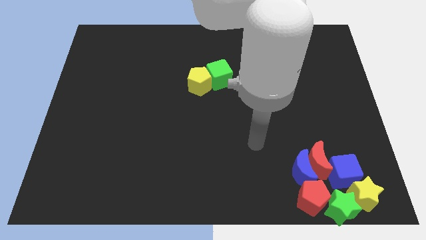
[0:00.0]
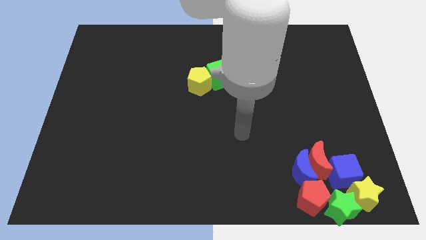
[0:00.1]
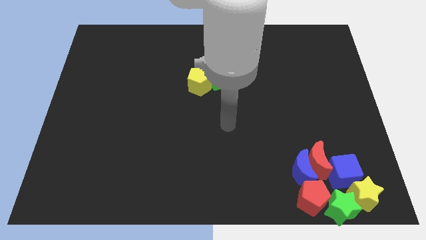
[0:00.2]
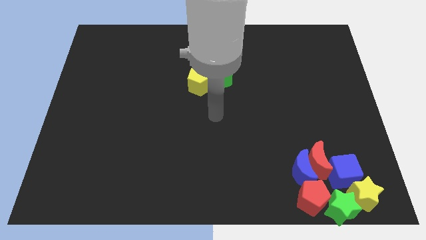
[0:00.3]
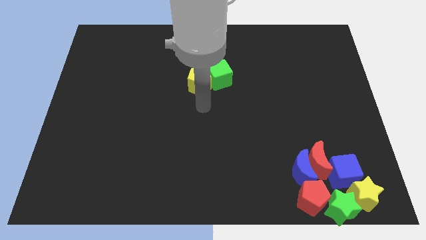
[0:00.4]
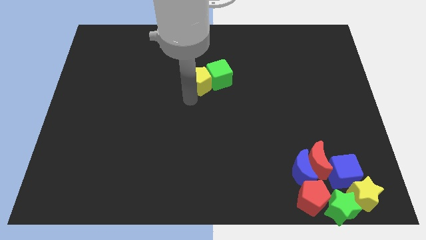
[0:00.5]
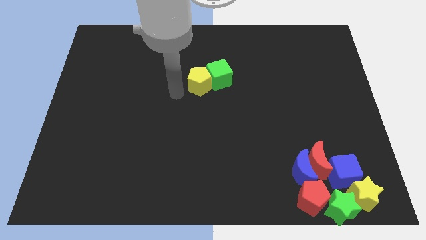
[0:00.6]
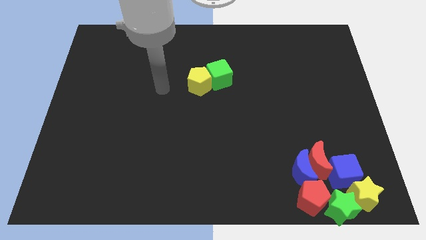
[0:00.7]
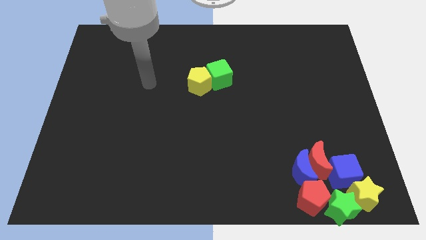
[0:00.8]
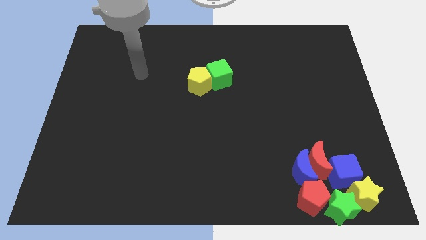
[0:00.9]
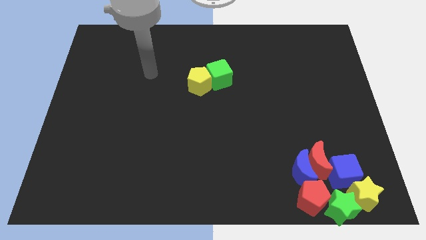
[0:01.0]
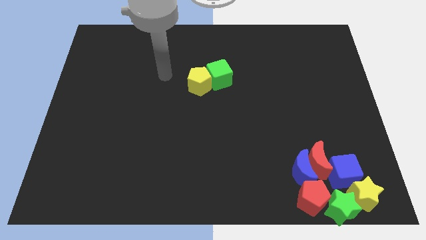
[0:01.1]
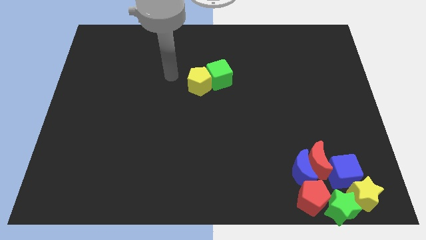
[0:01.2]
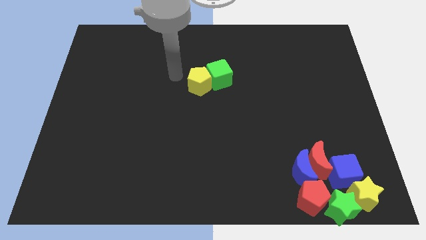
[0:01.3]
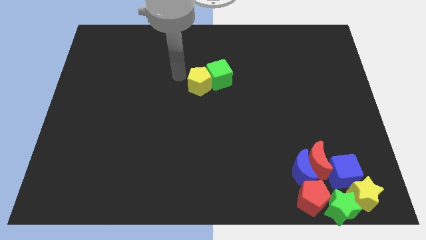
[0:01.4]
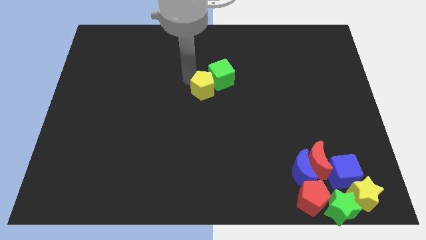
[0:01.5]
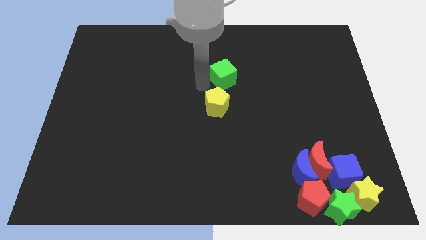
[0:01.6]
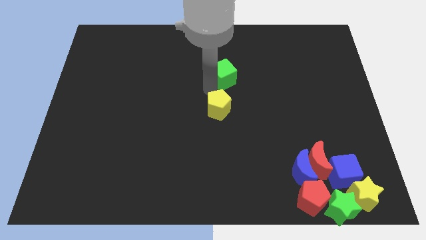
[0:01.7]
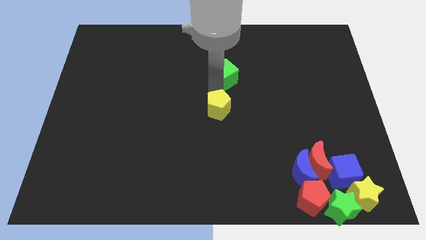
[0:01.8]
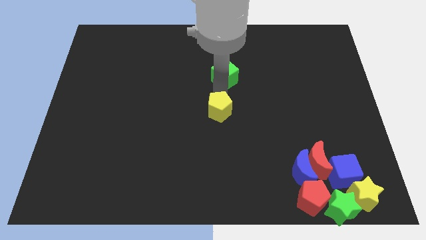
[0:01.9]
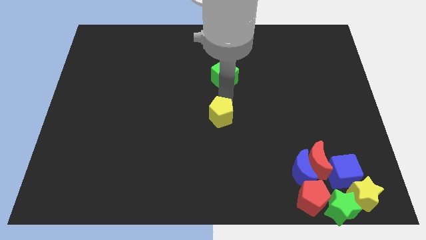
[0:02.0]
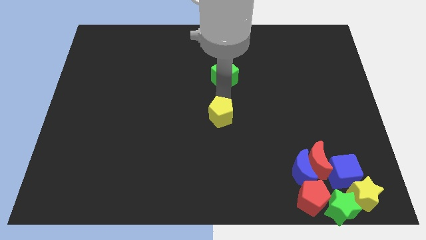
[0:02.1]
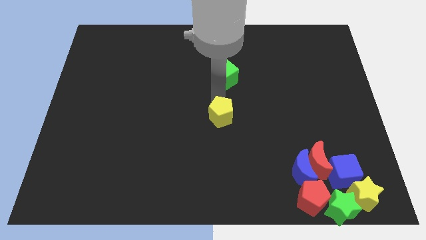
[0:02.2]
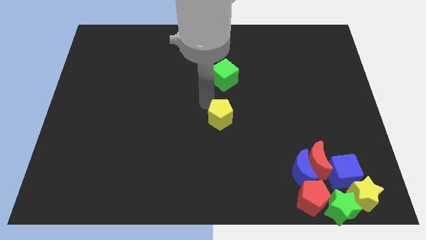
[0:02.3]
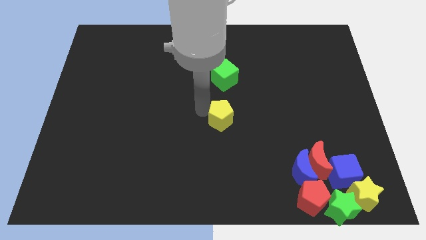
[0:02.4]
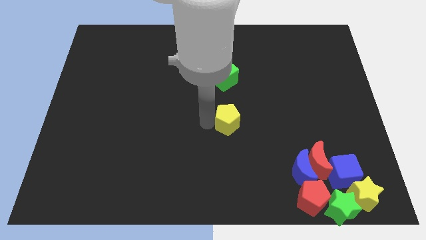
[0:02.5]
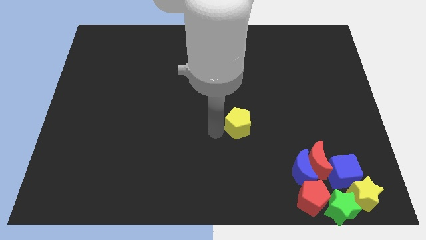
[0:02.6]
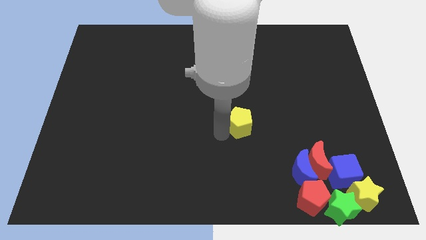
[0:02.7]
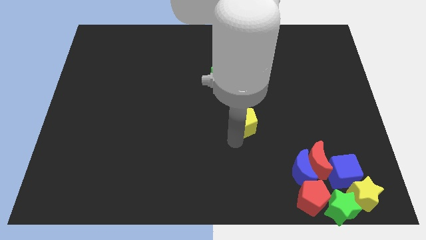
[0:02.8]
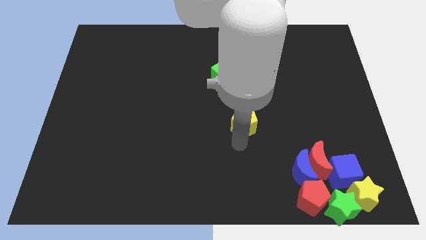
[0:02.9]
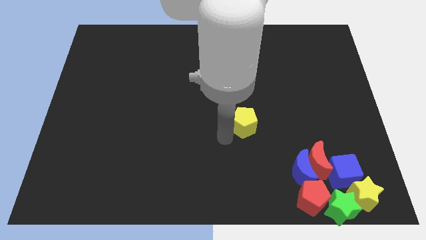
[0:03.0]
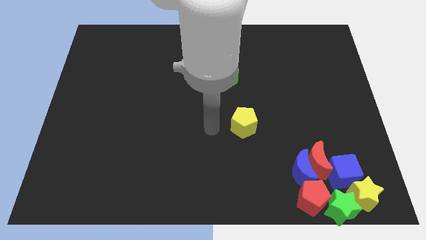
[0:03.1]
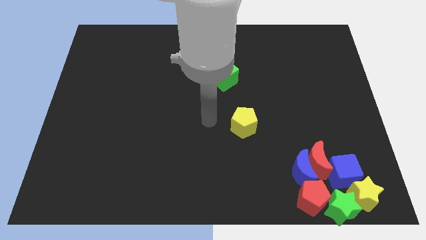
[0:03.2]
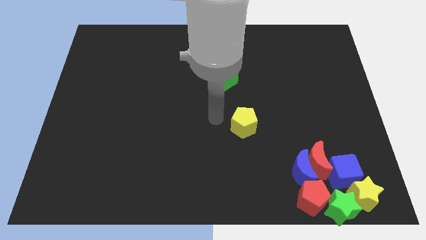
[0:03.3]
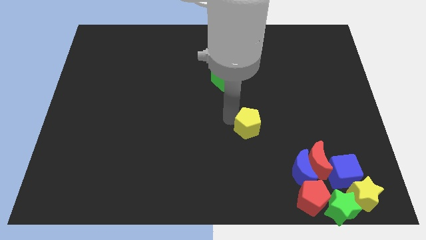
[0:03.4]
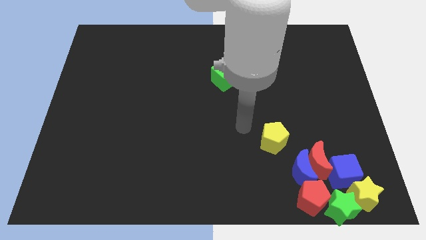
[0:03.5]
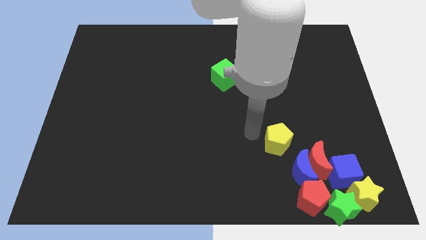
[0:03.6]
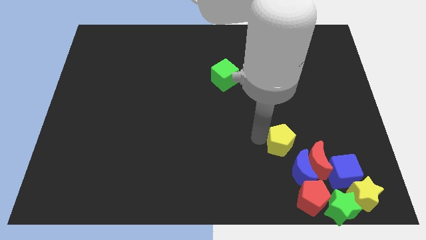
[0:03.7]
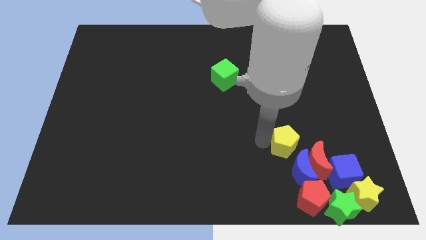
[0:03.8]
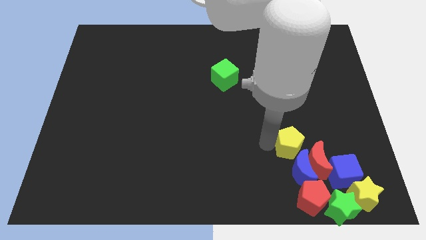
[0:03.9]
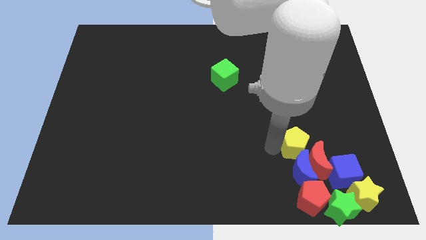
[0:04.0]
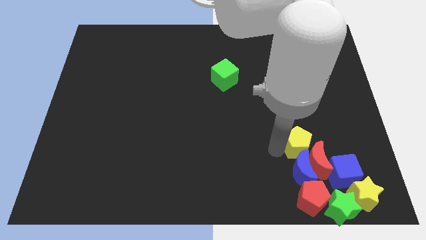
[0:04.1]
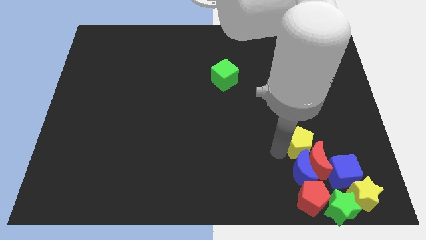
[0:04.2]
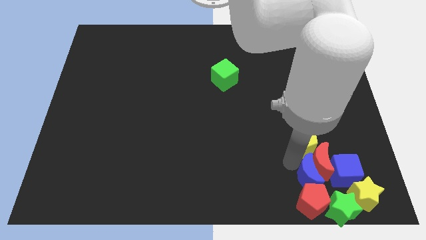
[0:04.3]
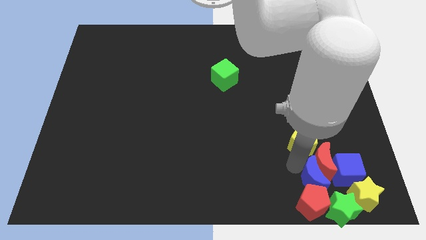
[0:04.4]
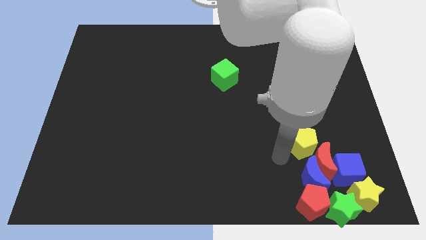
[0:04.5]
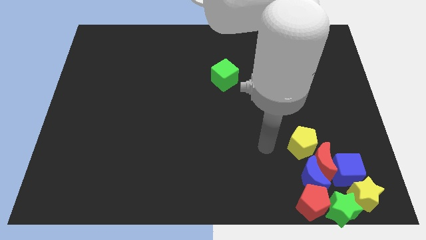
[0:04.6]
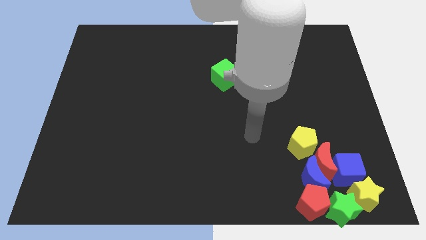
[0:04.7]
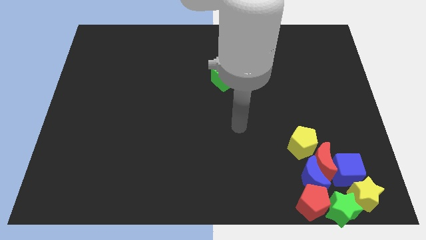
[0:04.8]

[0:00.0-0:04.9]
push the yellow pentagon into the group of blocks

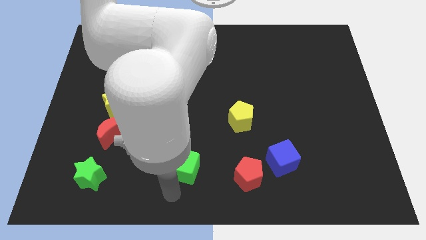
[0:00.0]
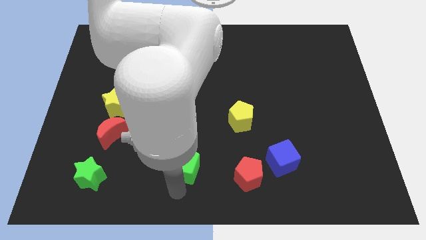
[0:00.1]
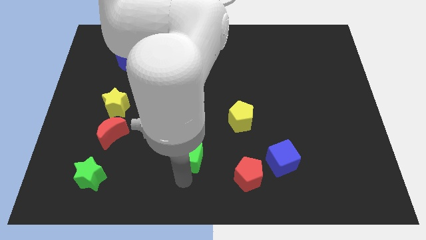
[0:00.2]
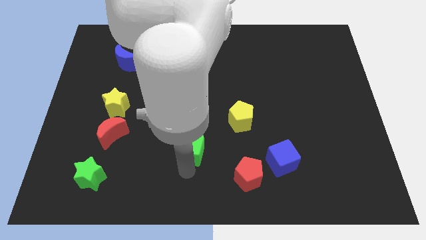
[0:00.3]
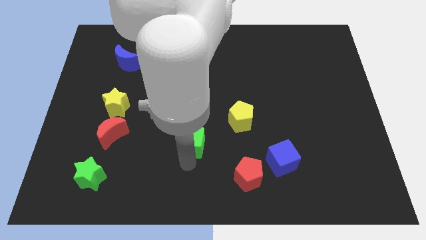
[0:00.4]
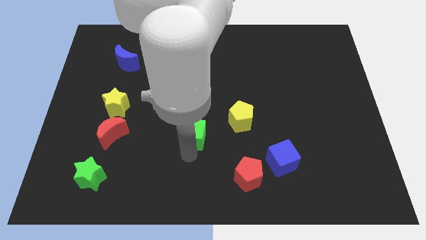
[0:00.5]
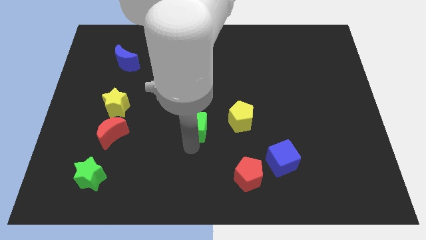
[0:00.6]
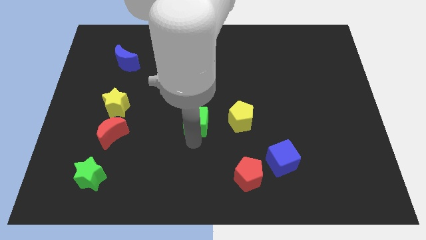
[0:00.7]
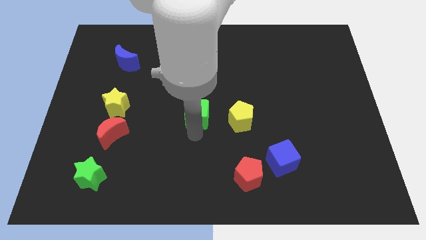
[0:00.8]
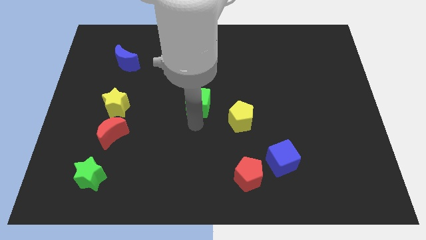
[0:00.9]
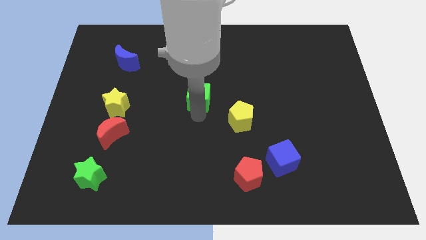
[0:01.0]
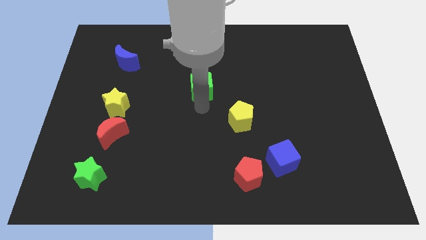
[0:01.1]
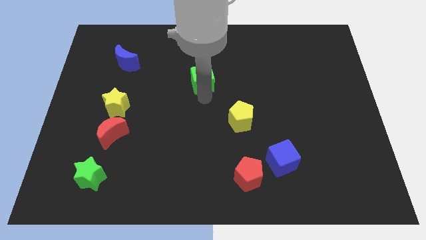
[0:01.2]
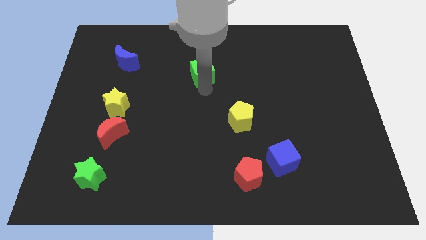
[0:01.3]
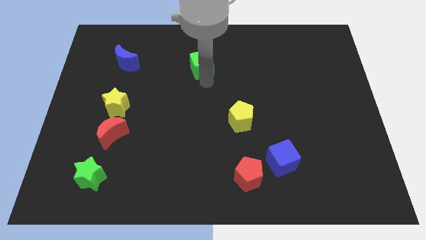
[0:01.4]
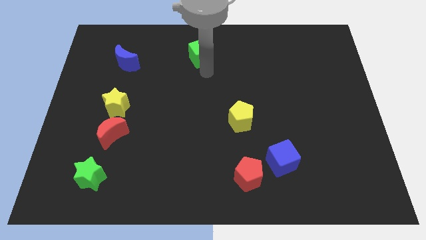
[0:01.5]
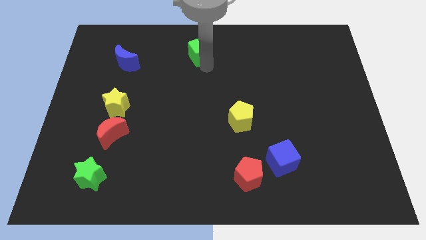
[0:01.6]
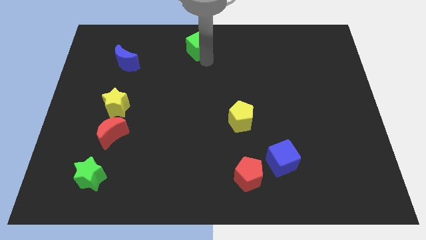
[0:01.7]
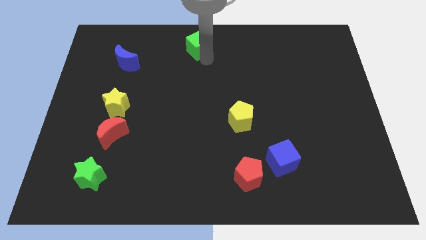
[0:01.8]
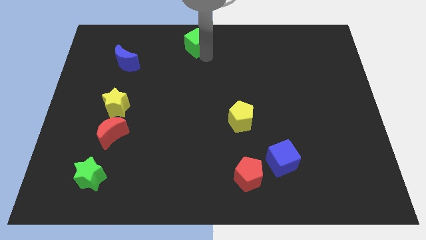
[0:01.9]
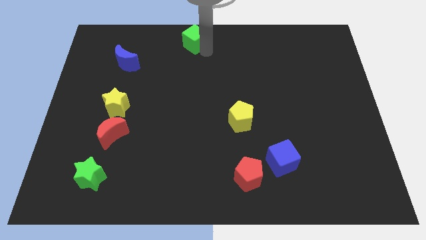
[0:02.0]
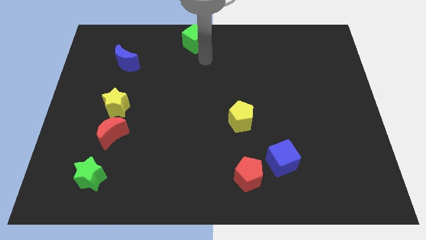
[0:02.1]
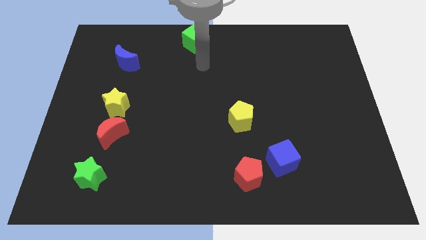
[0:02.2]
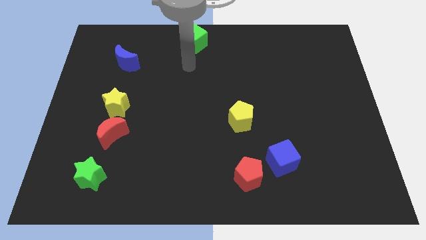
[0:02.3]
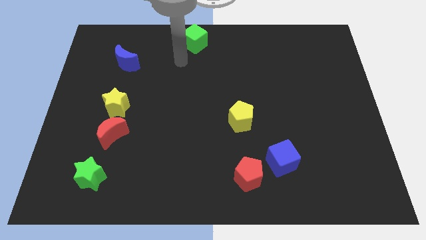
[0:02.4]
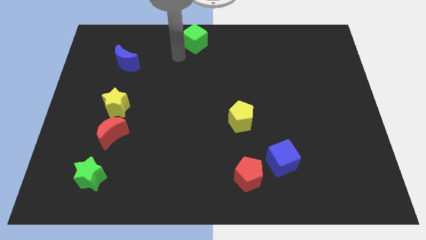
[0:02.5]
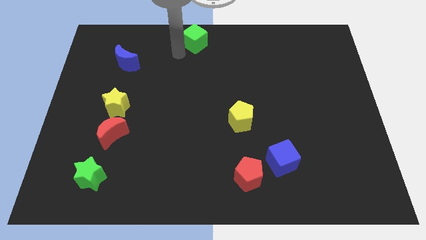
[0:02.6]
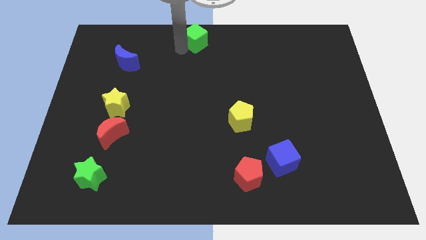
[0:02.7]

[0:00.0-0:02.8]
put the green cube diagonal to the right of the blue crescent

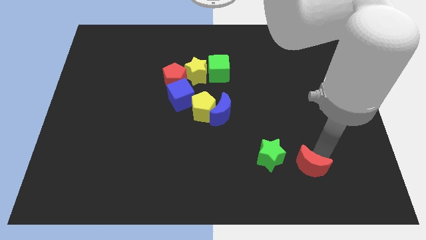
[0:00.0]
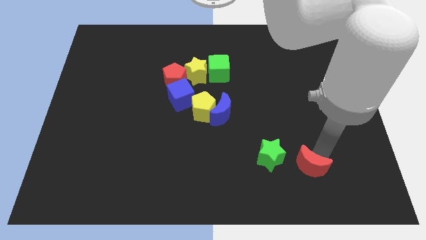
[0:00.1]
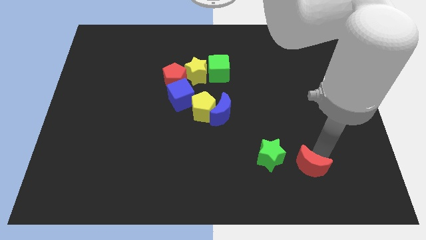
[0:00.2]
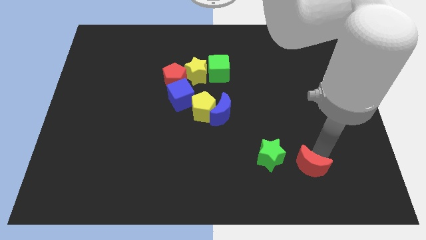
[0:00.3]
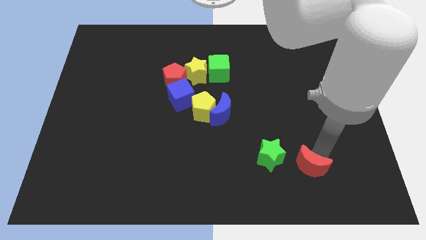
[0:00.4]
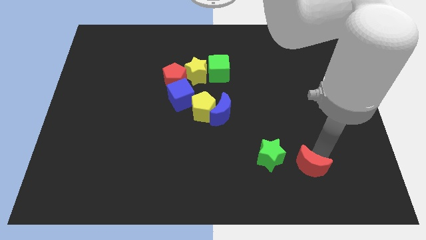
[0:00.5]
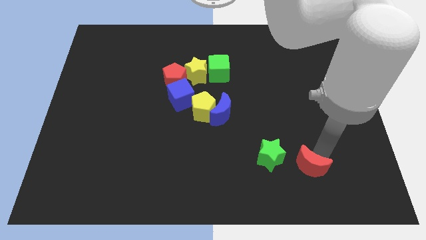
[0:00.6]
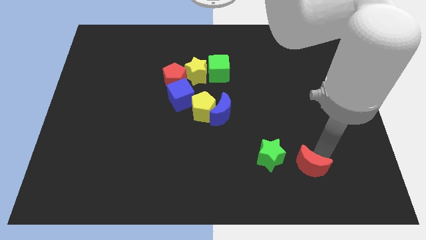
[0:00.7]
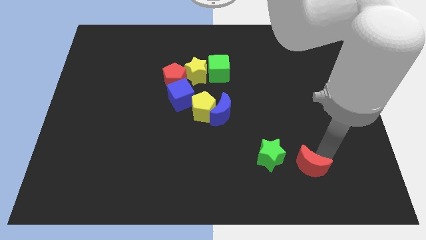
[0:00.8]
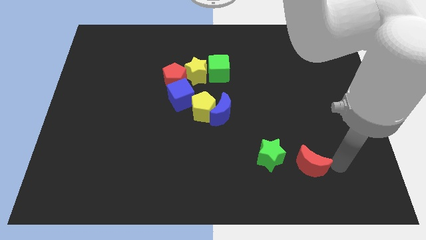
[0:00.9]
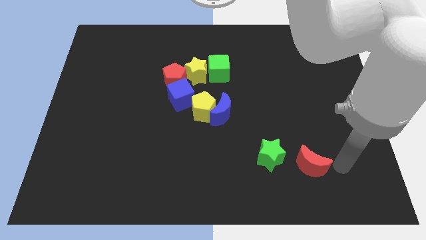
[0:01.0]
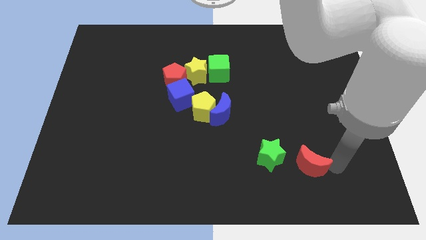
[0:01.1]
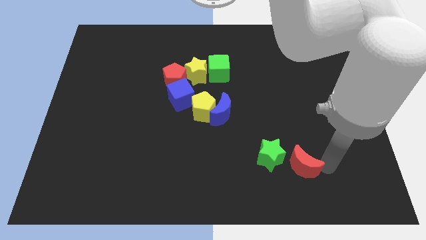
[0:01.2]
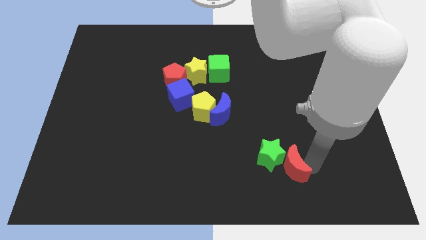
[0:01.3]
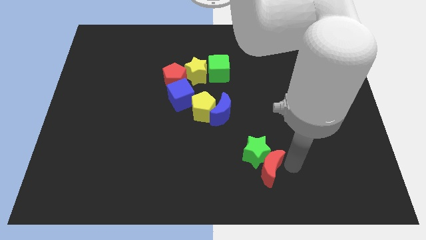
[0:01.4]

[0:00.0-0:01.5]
push the red moon into the green star

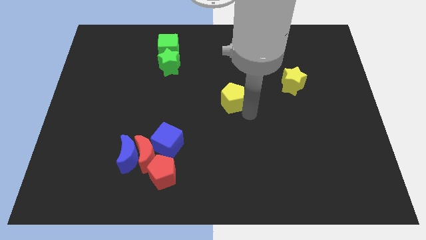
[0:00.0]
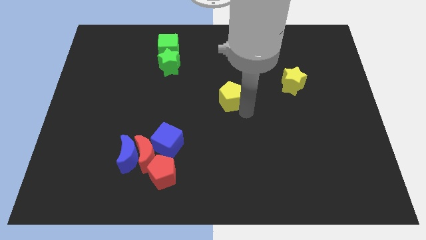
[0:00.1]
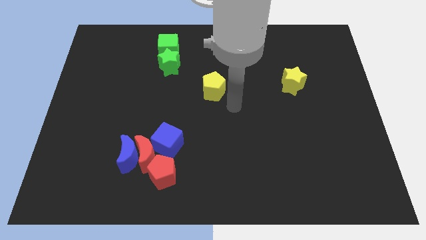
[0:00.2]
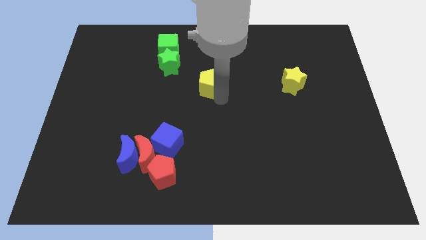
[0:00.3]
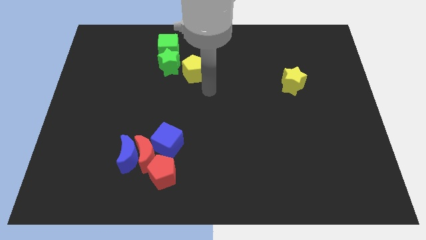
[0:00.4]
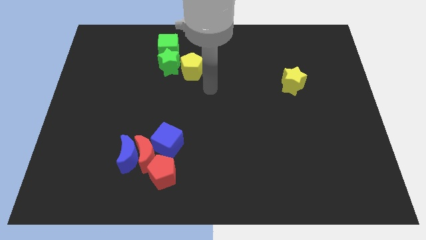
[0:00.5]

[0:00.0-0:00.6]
move the yellow pentagon right to the green star
